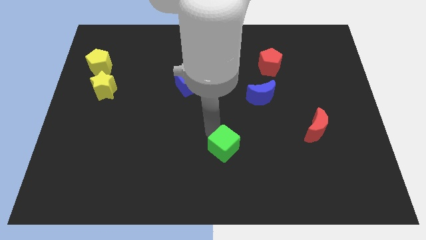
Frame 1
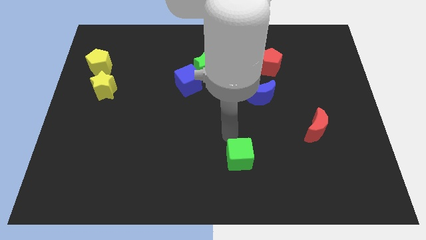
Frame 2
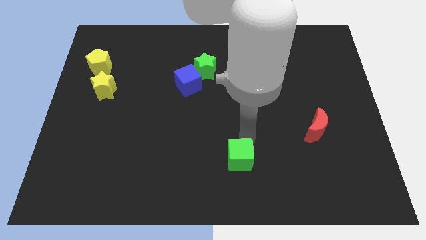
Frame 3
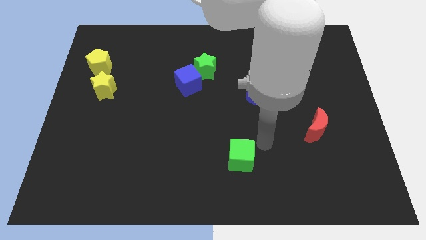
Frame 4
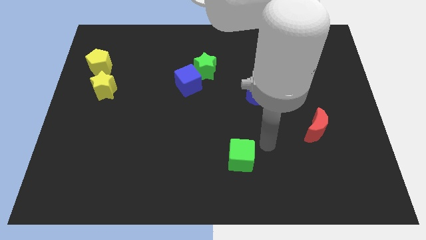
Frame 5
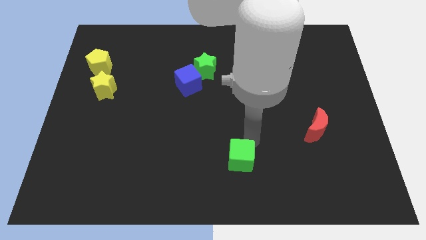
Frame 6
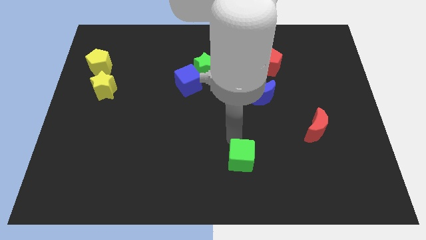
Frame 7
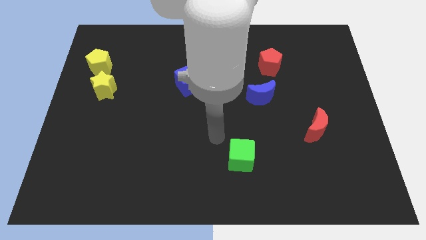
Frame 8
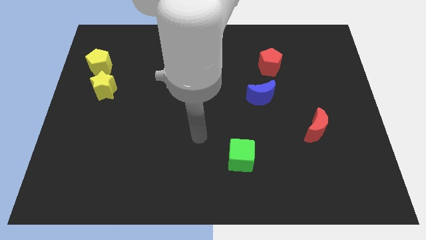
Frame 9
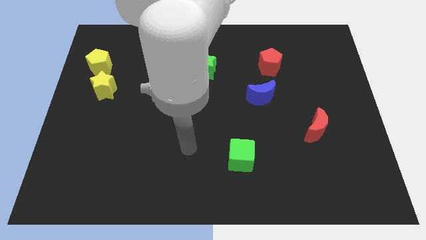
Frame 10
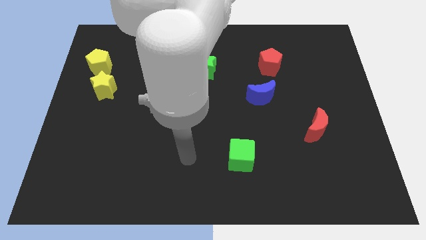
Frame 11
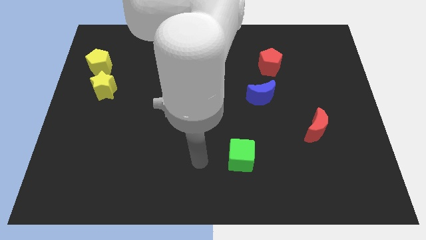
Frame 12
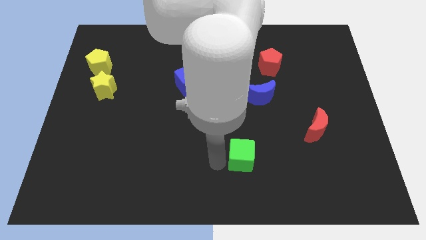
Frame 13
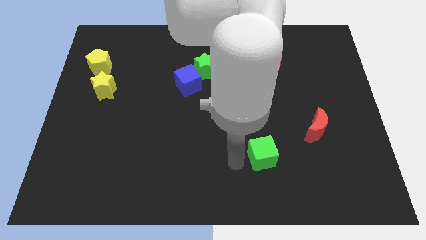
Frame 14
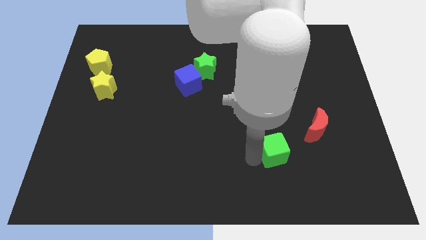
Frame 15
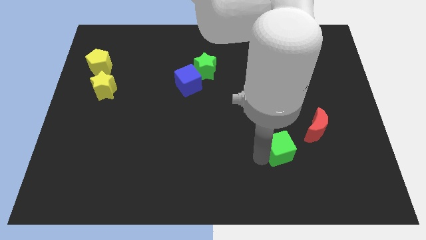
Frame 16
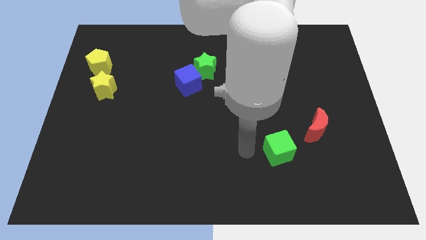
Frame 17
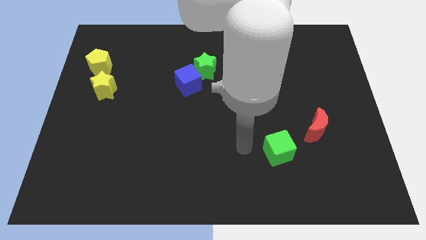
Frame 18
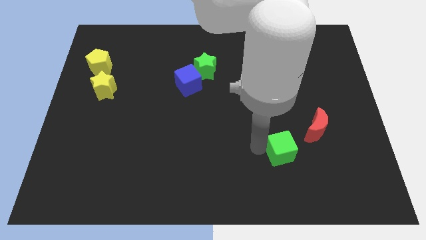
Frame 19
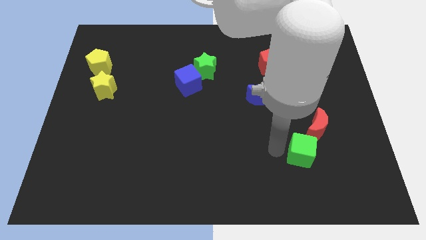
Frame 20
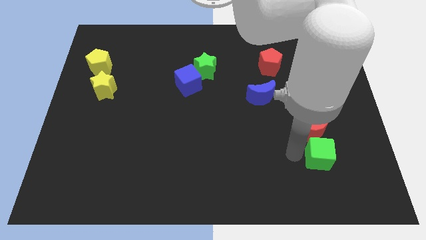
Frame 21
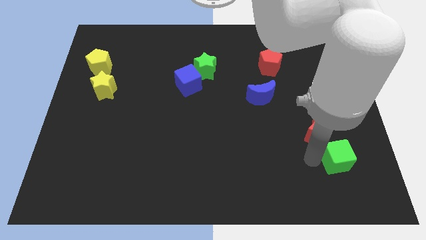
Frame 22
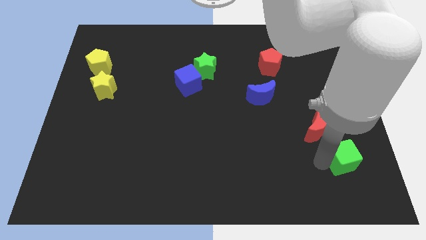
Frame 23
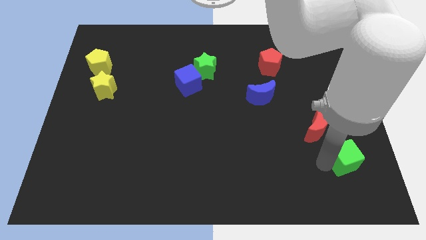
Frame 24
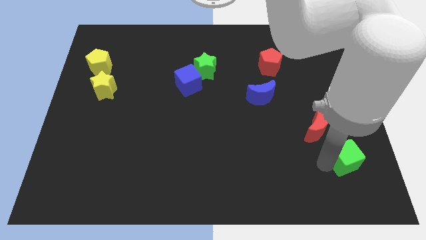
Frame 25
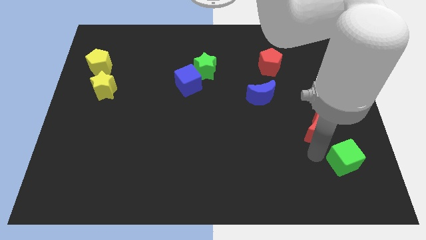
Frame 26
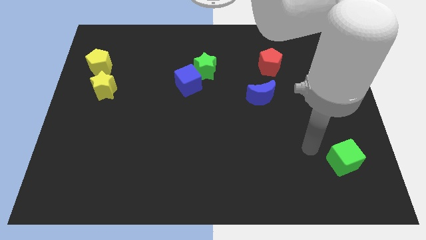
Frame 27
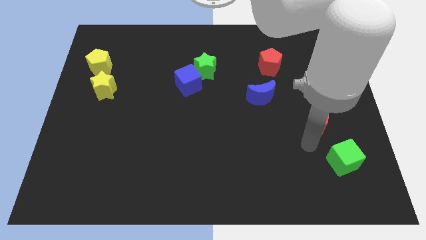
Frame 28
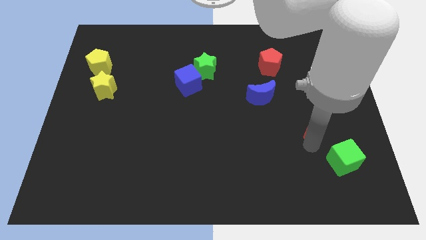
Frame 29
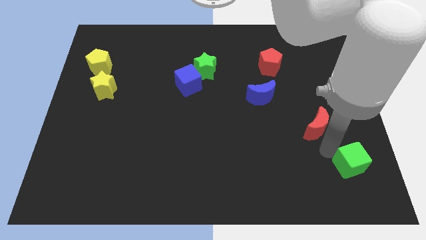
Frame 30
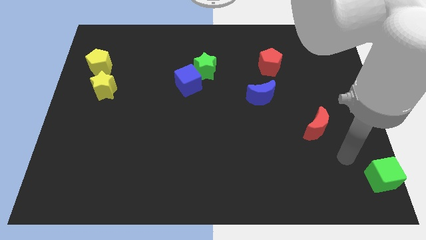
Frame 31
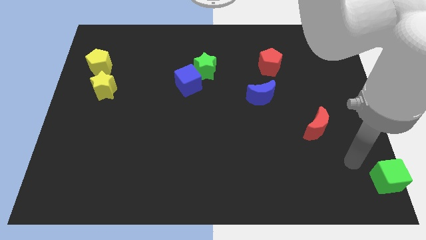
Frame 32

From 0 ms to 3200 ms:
move the green cube towards the bottom right of the board

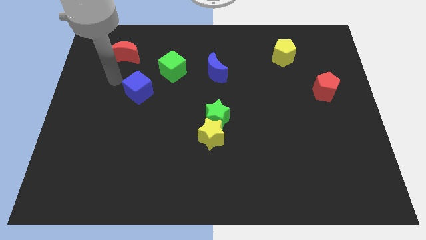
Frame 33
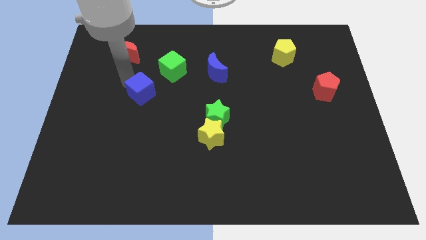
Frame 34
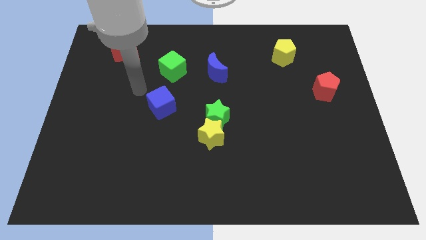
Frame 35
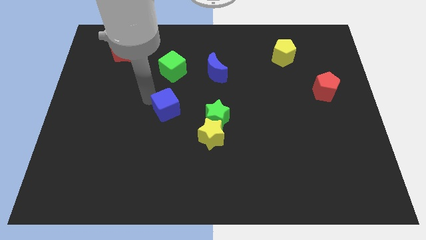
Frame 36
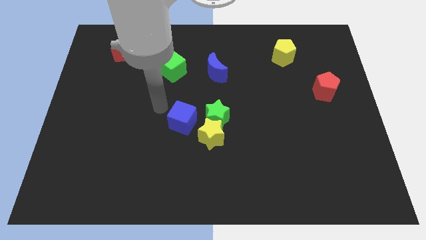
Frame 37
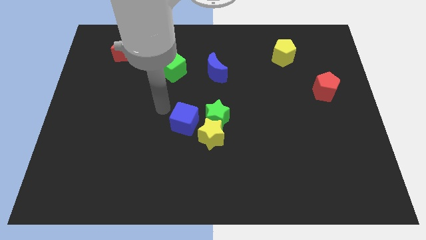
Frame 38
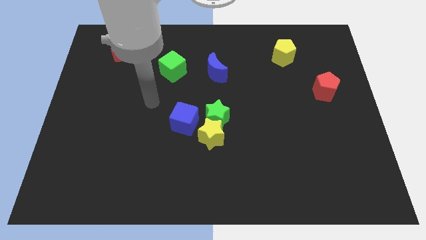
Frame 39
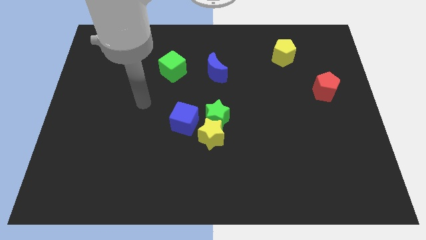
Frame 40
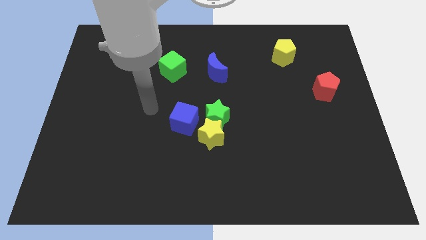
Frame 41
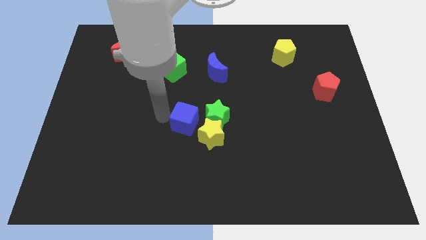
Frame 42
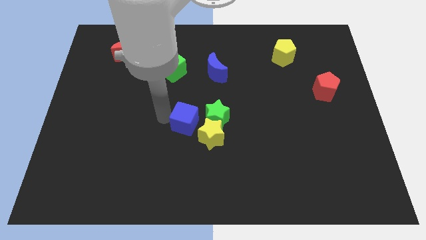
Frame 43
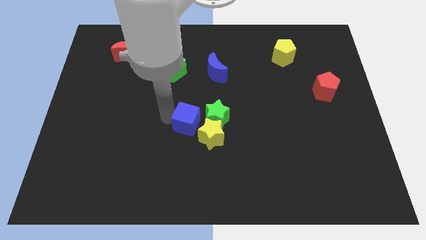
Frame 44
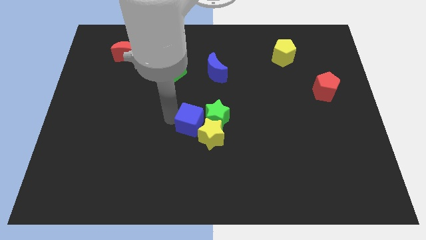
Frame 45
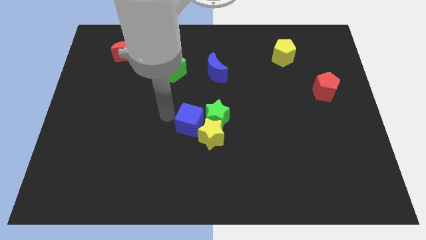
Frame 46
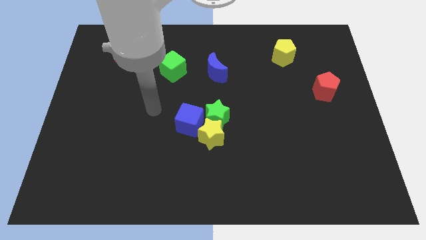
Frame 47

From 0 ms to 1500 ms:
place the blue cube close to the green star and yellow star

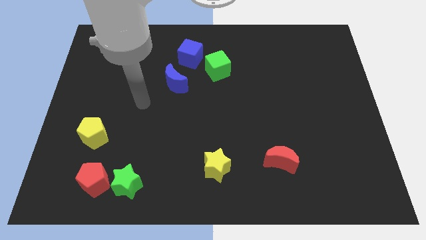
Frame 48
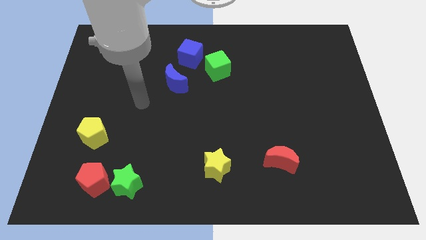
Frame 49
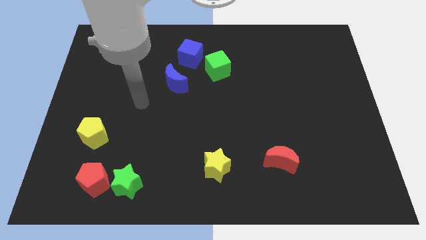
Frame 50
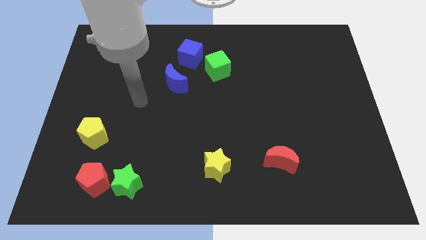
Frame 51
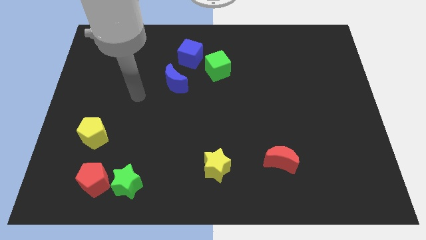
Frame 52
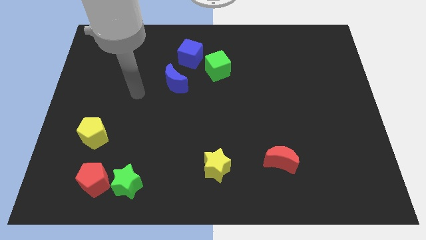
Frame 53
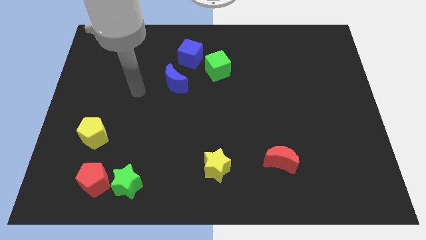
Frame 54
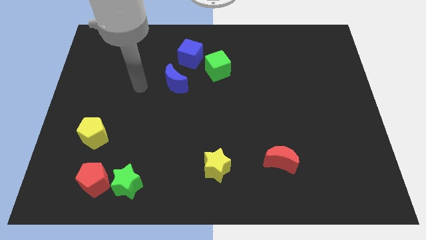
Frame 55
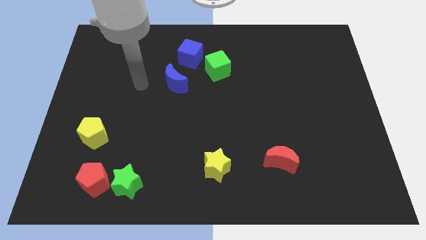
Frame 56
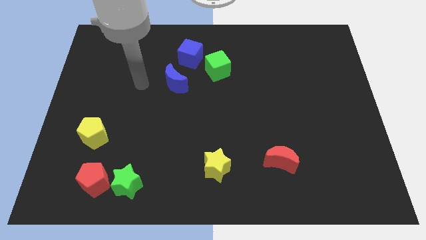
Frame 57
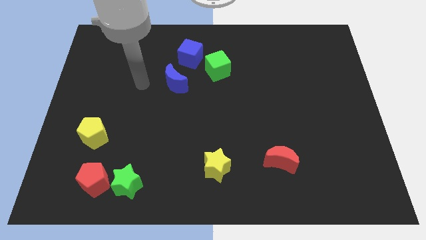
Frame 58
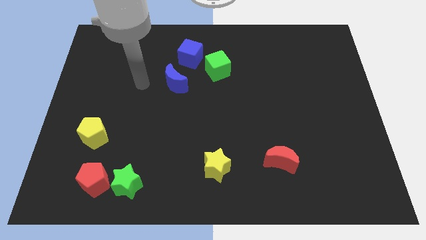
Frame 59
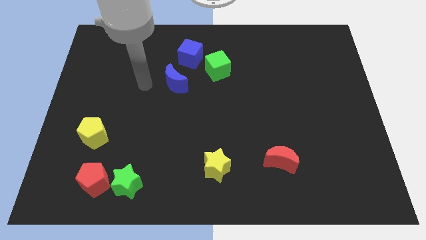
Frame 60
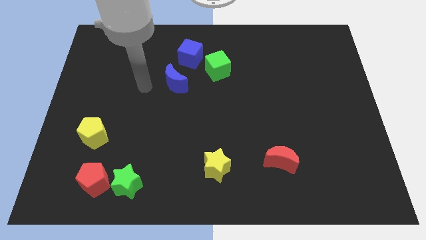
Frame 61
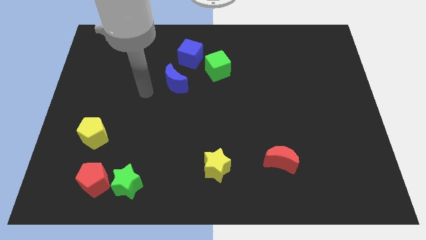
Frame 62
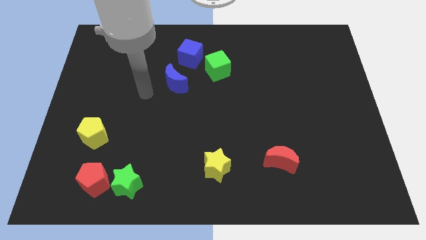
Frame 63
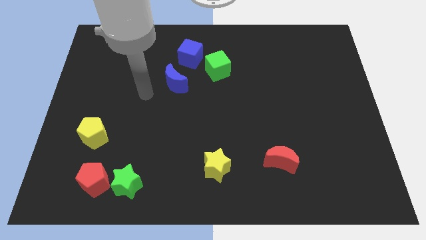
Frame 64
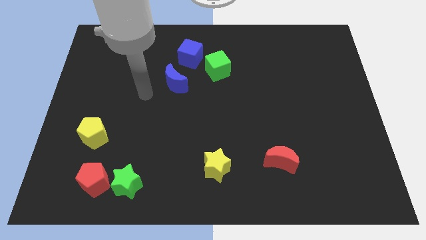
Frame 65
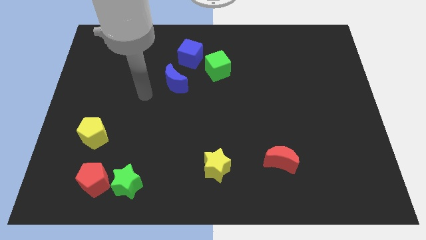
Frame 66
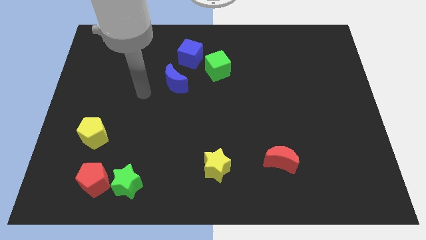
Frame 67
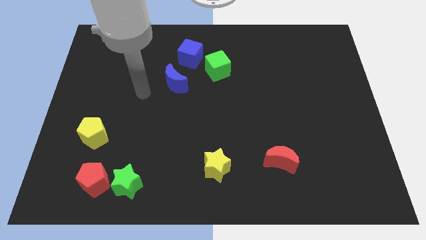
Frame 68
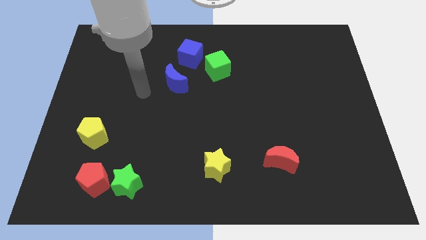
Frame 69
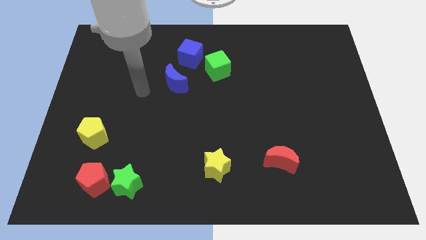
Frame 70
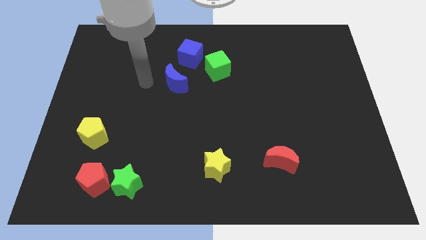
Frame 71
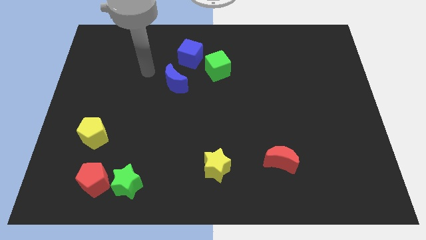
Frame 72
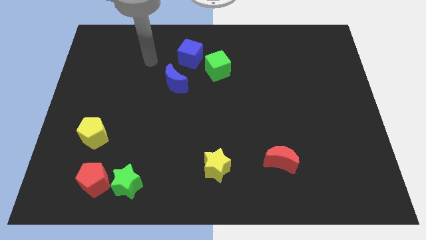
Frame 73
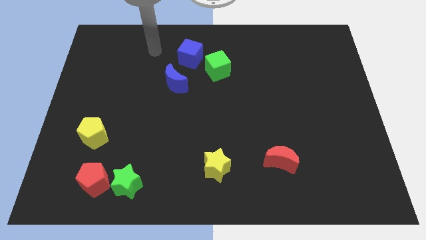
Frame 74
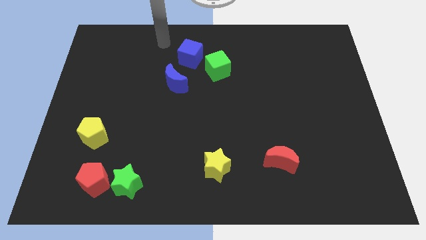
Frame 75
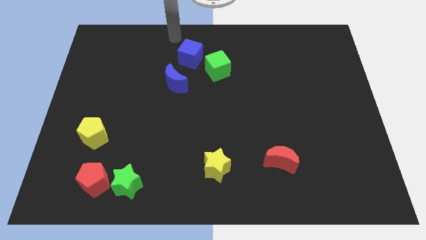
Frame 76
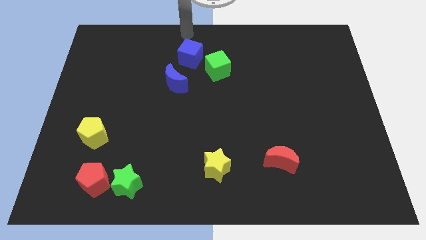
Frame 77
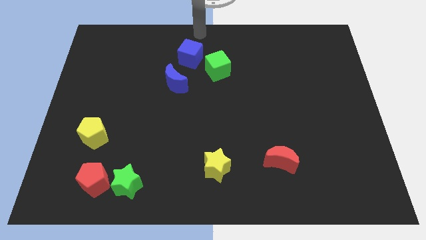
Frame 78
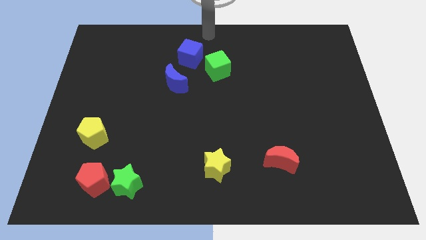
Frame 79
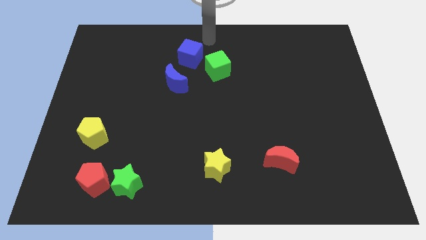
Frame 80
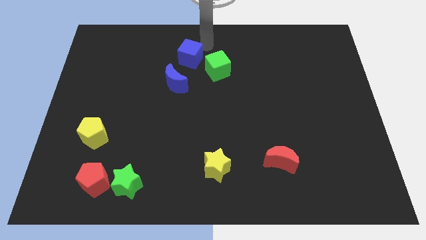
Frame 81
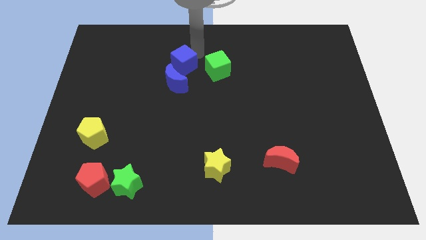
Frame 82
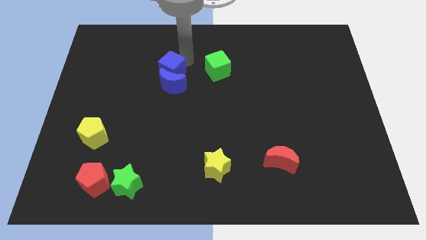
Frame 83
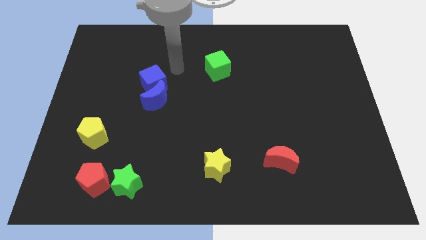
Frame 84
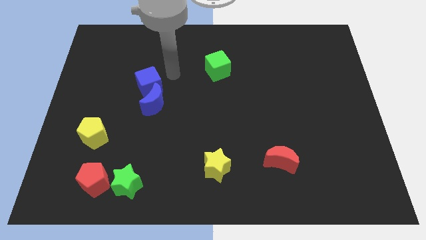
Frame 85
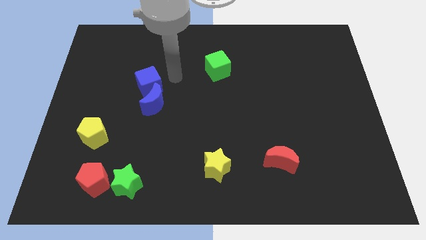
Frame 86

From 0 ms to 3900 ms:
push the blue cube and blue moon diagonally to yellow pentagon

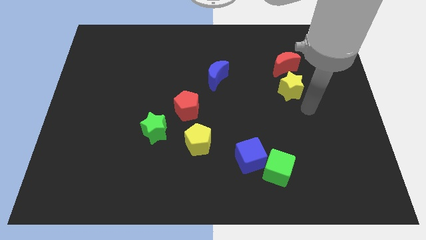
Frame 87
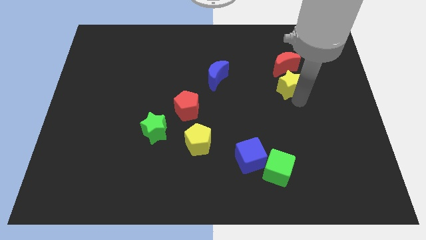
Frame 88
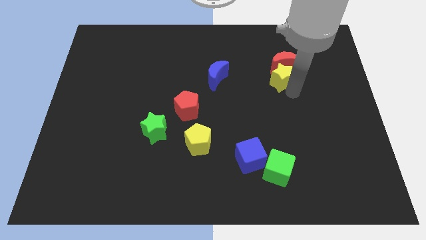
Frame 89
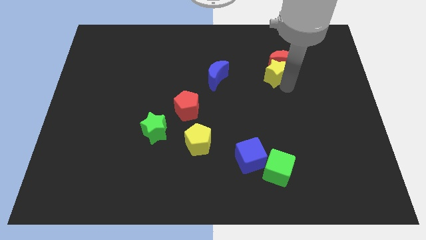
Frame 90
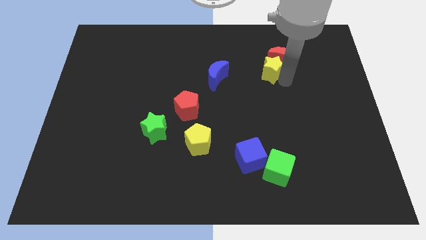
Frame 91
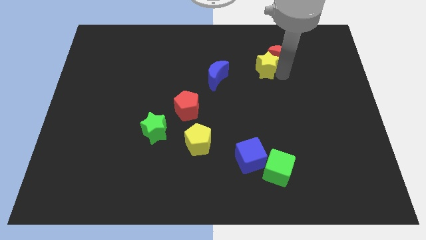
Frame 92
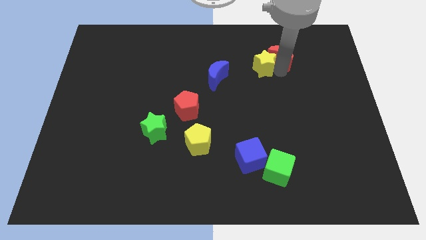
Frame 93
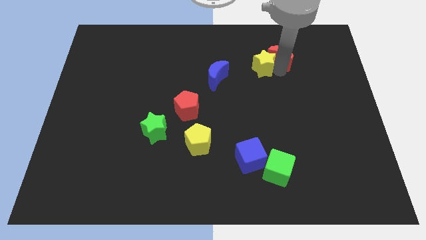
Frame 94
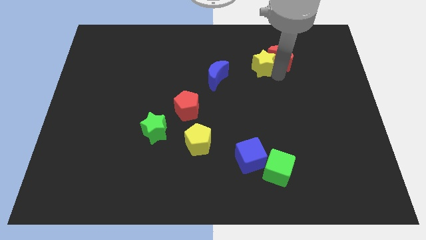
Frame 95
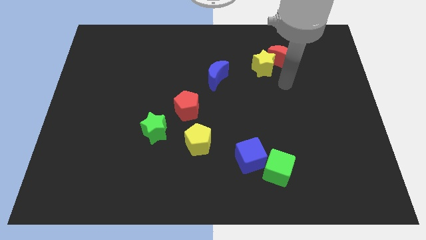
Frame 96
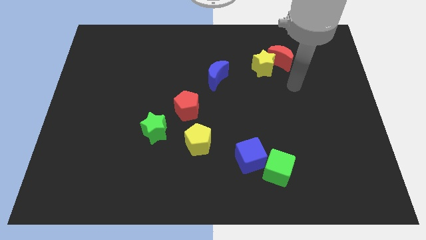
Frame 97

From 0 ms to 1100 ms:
push the yellow star to the left of the red crescent
